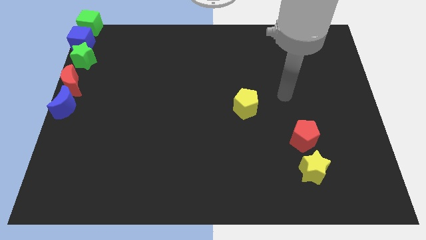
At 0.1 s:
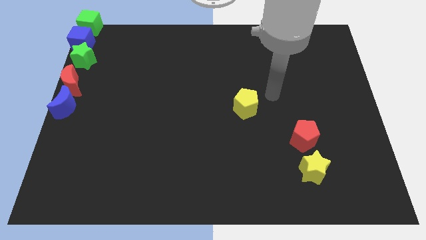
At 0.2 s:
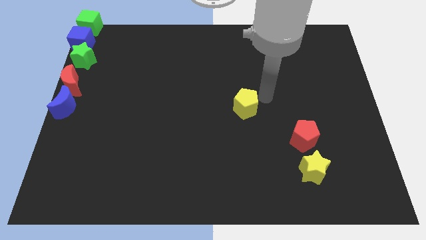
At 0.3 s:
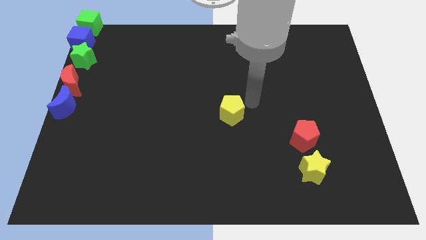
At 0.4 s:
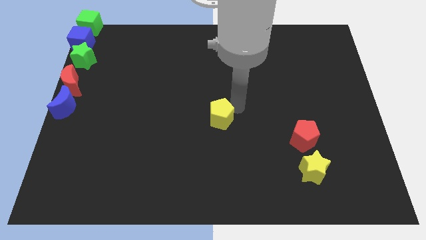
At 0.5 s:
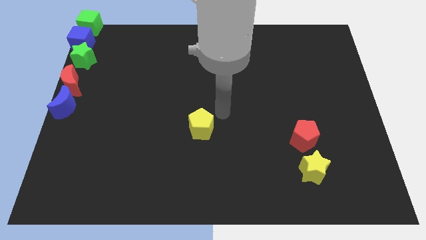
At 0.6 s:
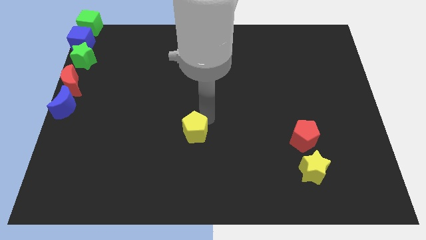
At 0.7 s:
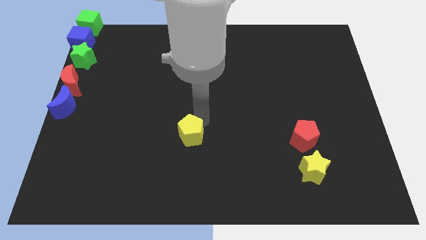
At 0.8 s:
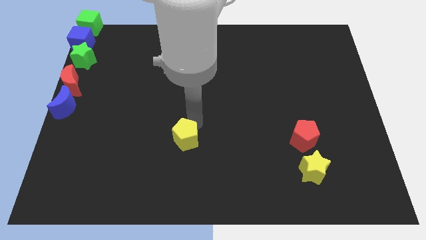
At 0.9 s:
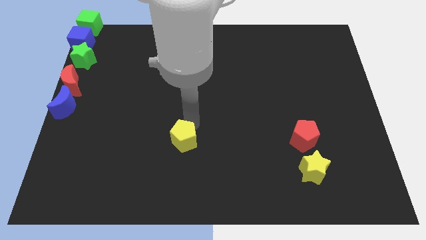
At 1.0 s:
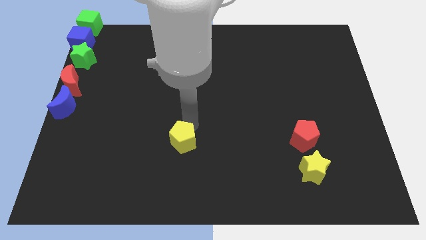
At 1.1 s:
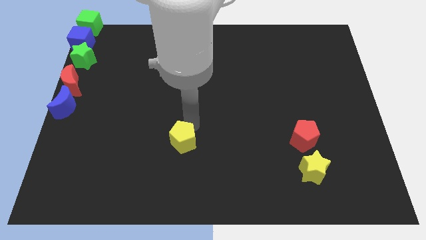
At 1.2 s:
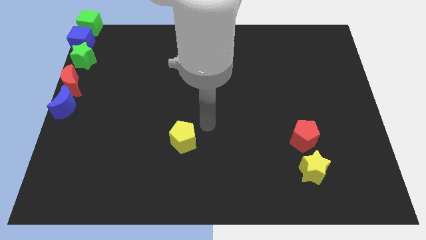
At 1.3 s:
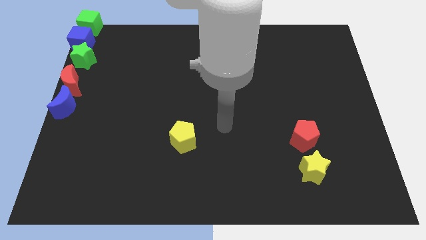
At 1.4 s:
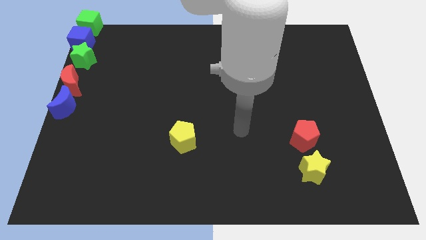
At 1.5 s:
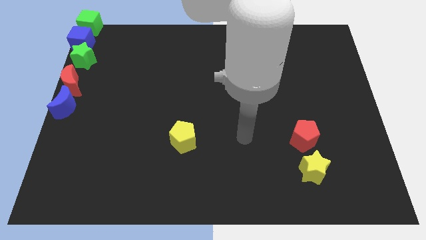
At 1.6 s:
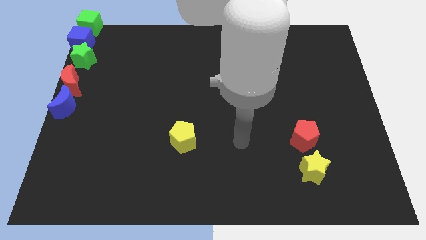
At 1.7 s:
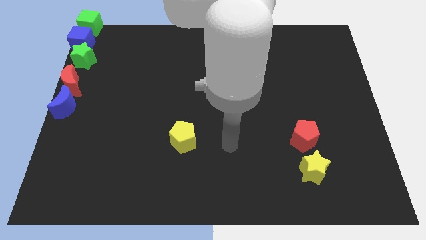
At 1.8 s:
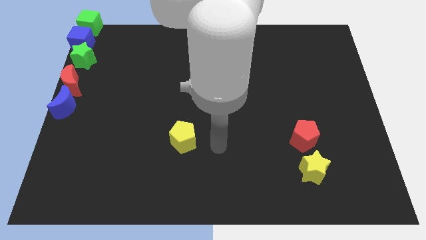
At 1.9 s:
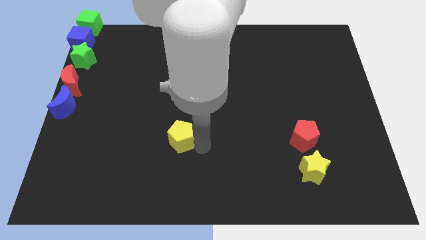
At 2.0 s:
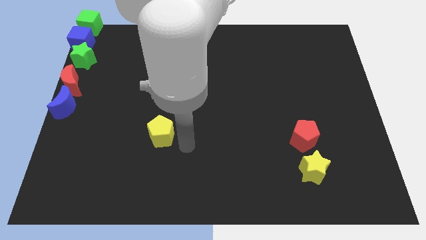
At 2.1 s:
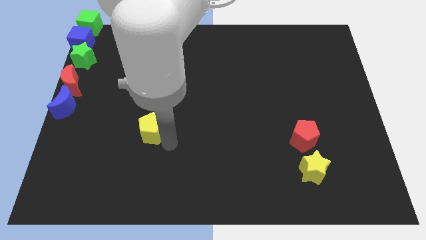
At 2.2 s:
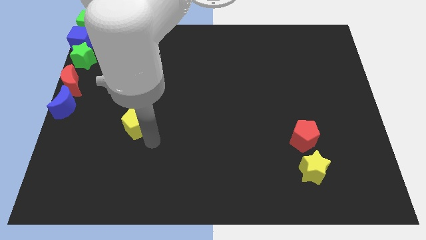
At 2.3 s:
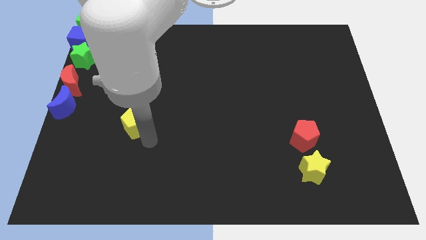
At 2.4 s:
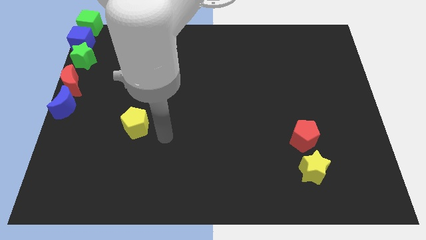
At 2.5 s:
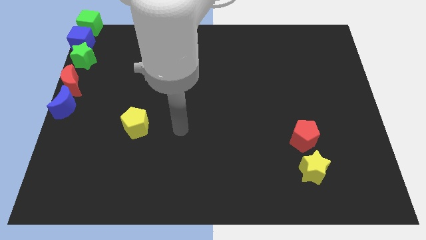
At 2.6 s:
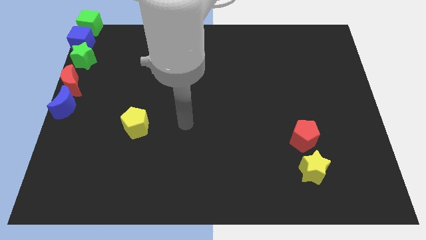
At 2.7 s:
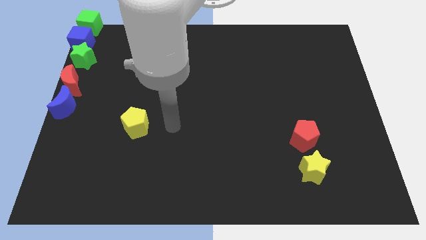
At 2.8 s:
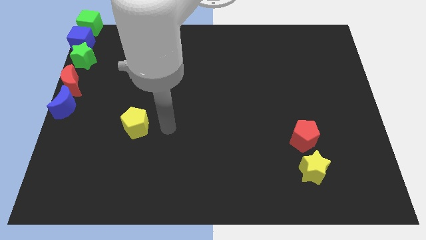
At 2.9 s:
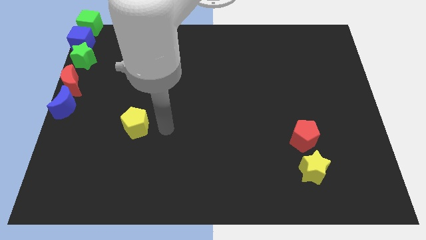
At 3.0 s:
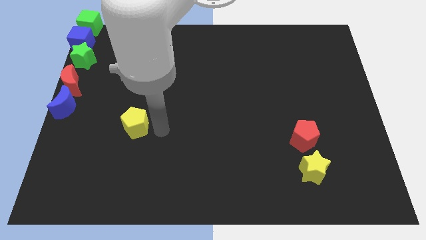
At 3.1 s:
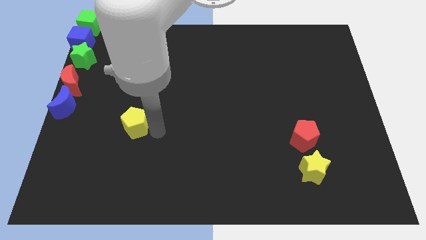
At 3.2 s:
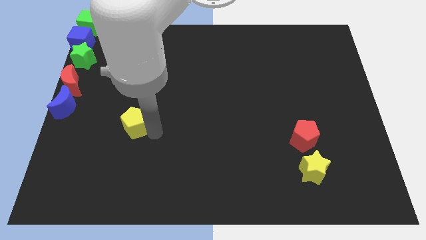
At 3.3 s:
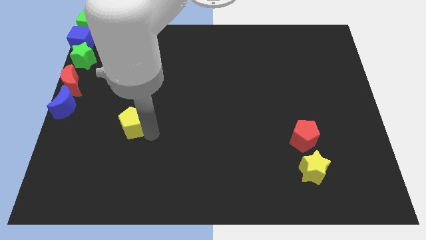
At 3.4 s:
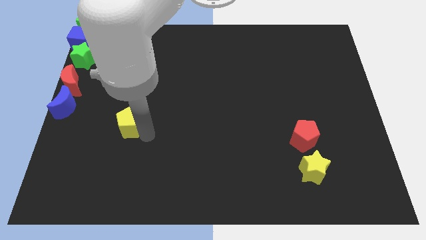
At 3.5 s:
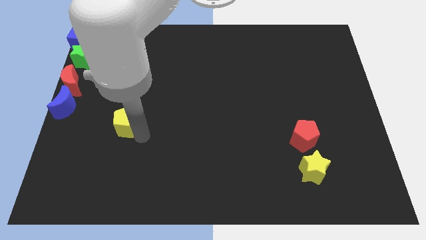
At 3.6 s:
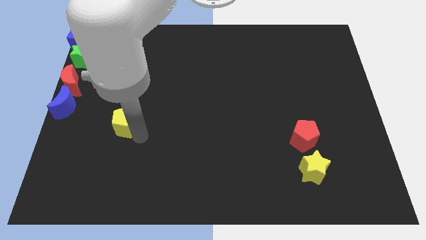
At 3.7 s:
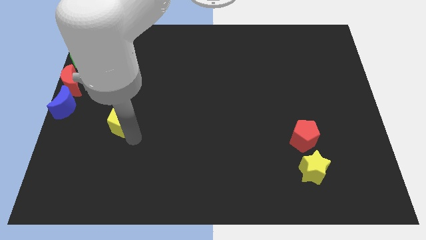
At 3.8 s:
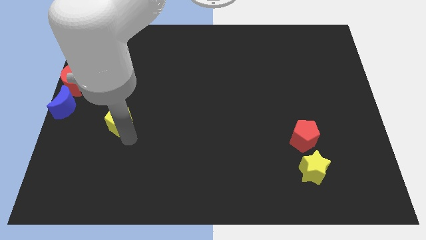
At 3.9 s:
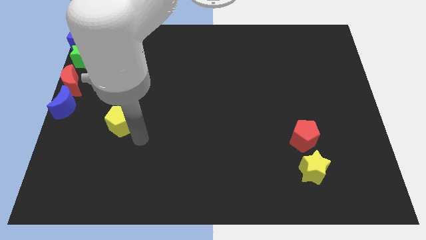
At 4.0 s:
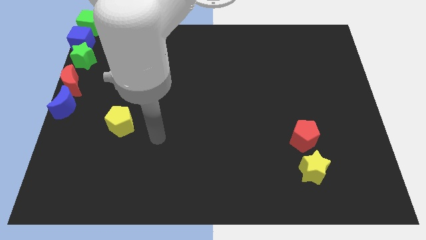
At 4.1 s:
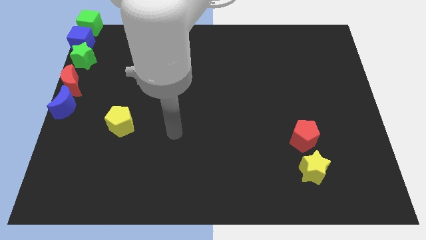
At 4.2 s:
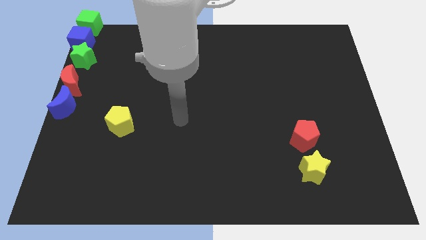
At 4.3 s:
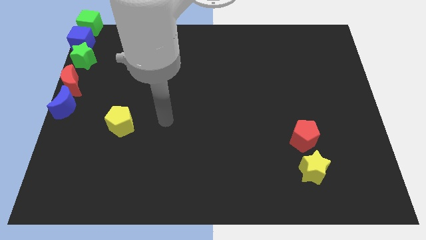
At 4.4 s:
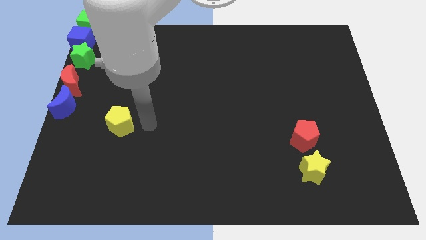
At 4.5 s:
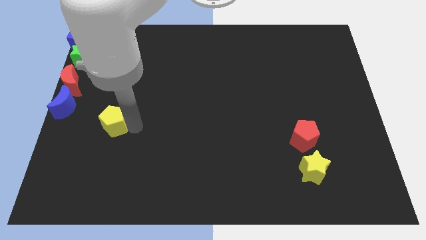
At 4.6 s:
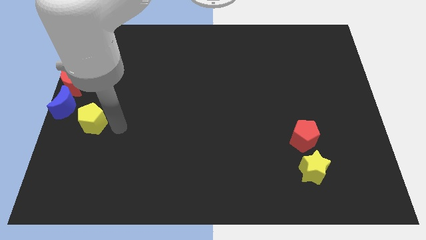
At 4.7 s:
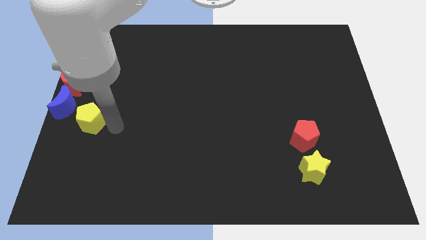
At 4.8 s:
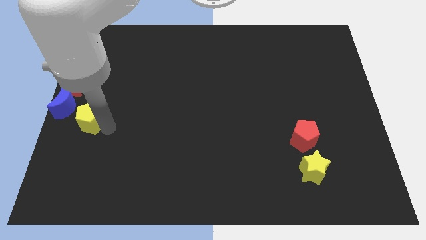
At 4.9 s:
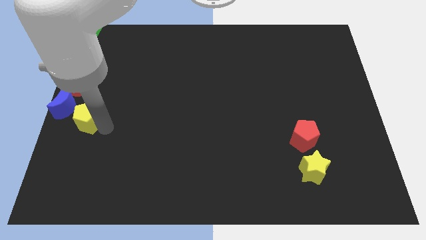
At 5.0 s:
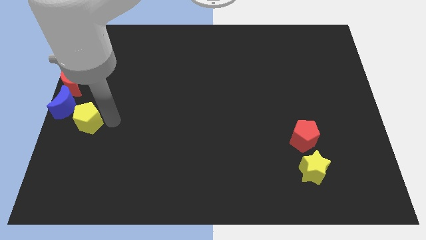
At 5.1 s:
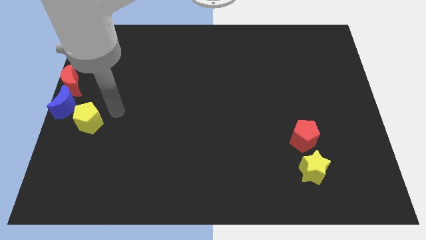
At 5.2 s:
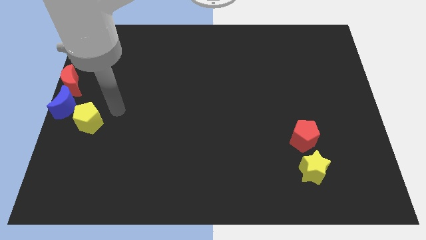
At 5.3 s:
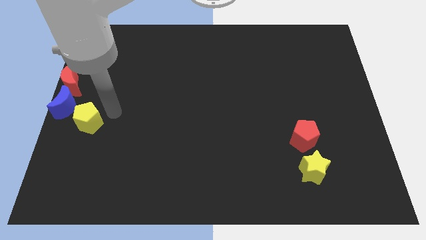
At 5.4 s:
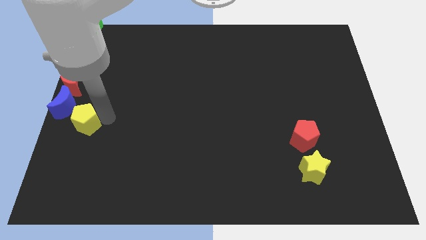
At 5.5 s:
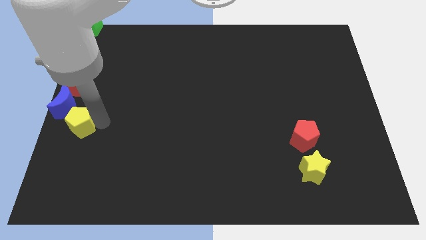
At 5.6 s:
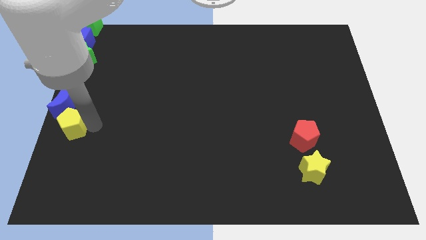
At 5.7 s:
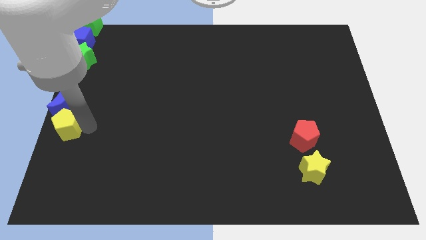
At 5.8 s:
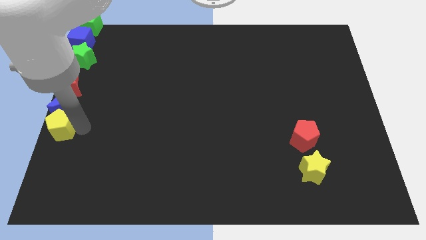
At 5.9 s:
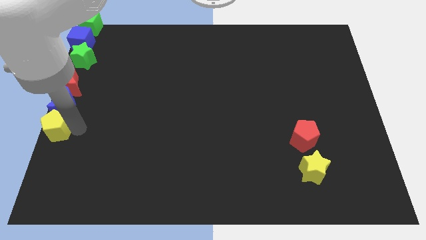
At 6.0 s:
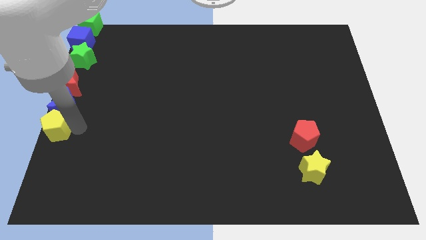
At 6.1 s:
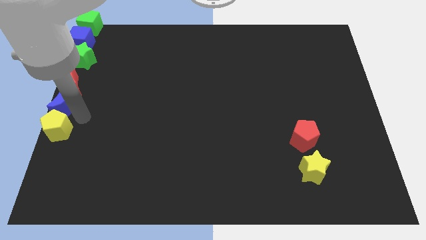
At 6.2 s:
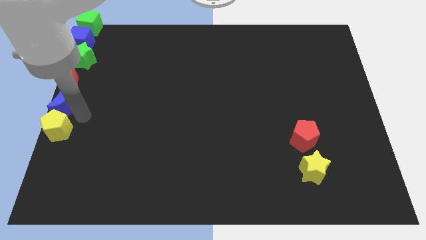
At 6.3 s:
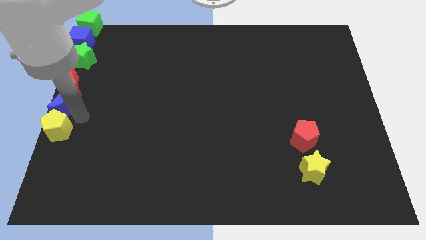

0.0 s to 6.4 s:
move the yellow pentagon to the bottom of blue crescent

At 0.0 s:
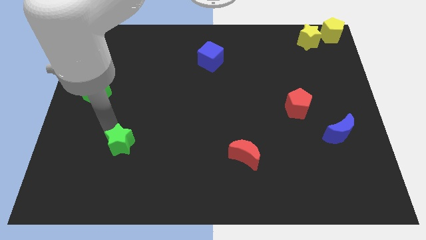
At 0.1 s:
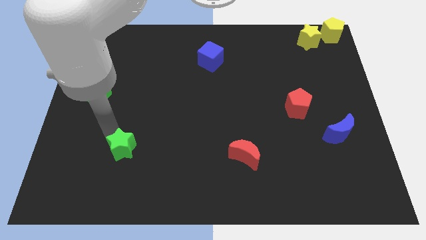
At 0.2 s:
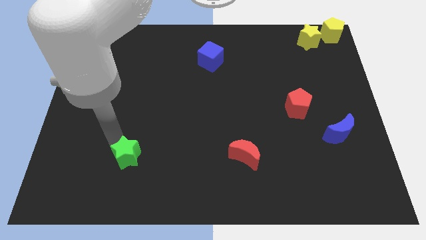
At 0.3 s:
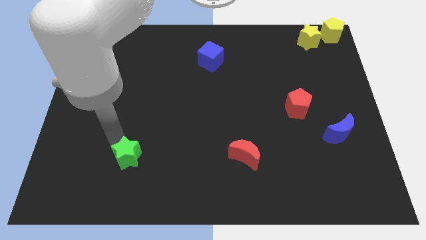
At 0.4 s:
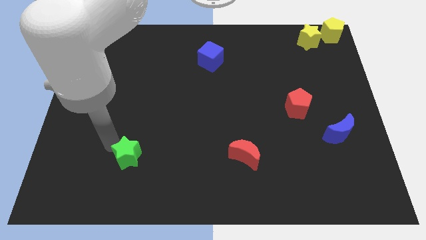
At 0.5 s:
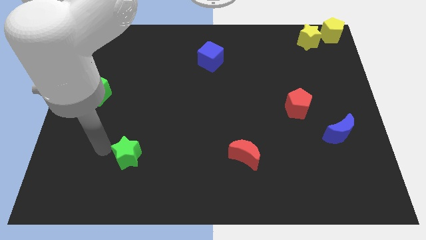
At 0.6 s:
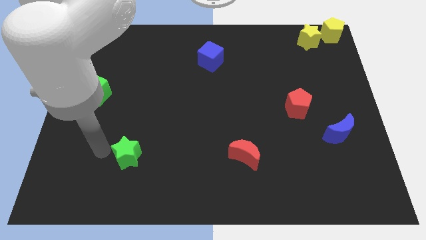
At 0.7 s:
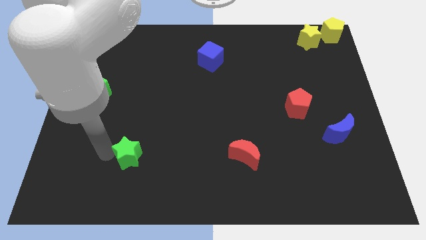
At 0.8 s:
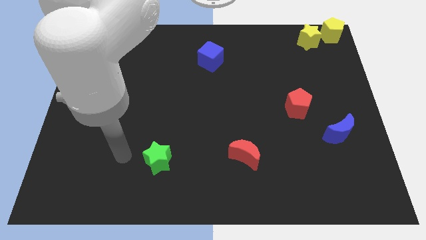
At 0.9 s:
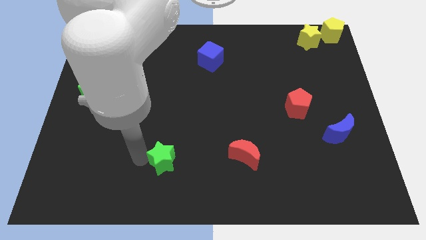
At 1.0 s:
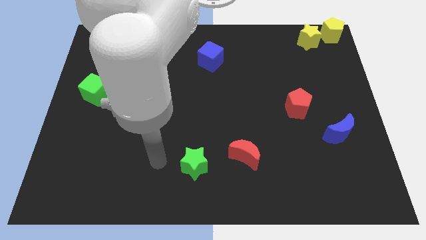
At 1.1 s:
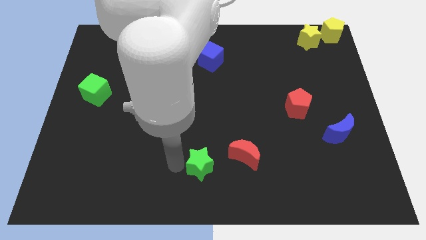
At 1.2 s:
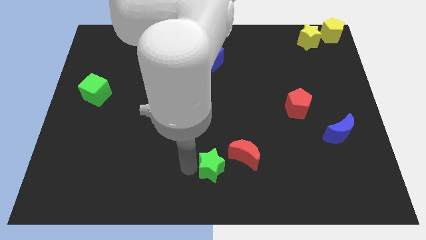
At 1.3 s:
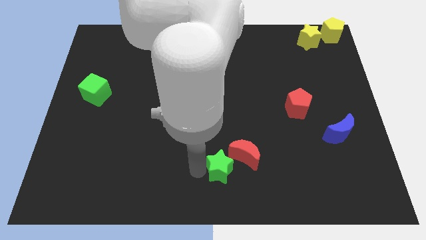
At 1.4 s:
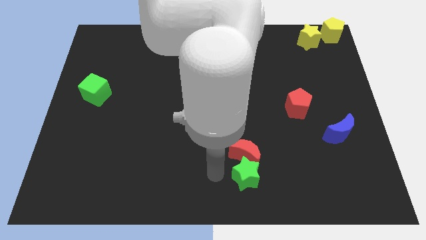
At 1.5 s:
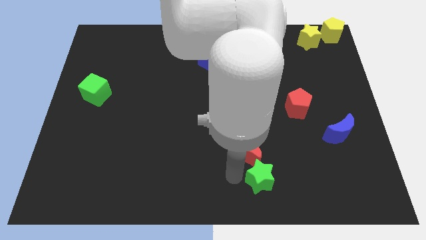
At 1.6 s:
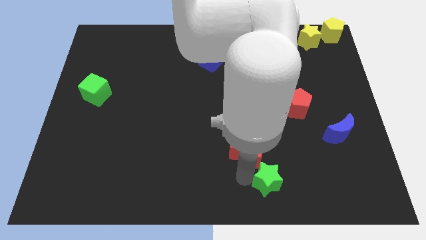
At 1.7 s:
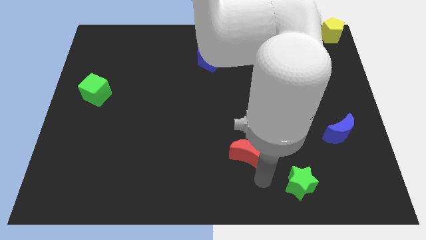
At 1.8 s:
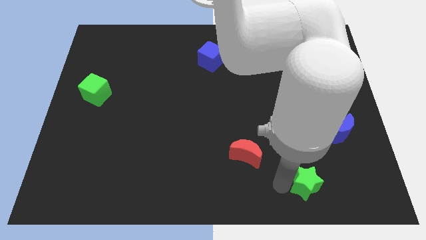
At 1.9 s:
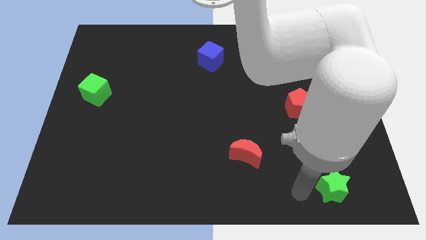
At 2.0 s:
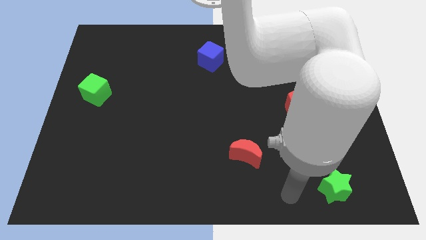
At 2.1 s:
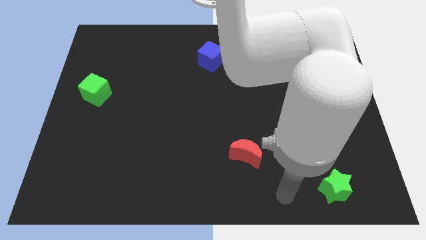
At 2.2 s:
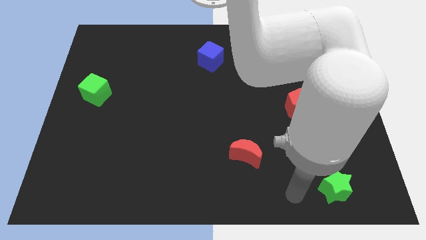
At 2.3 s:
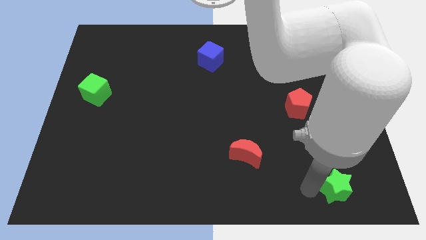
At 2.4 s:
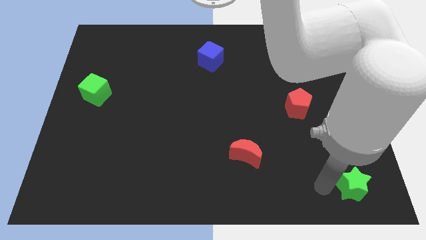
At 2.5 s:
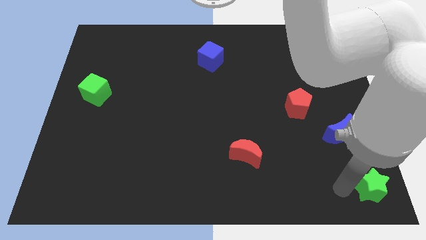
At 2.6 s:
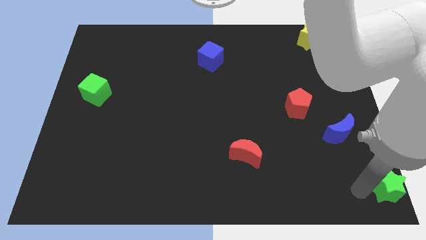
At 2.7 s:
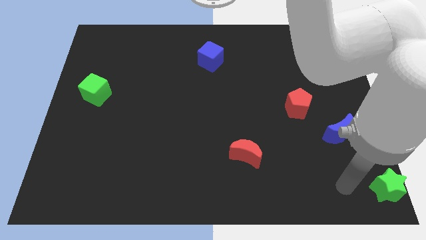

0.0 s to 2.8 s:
push the green star towards the bottom right corner of the board
